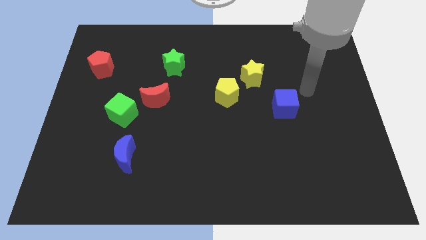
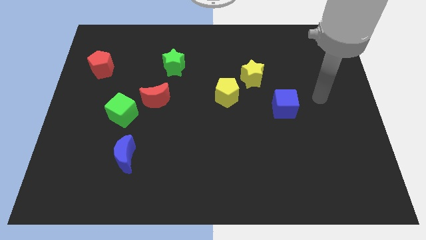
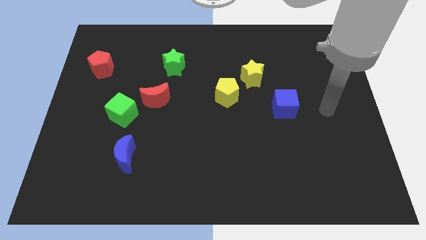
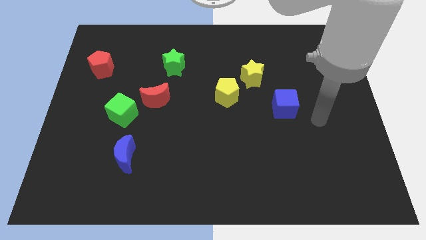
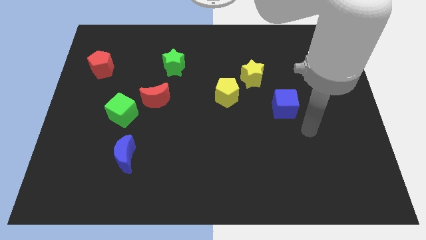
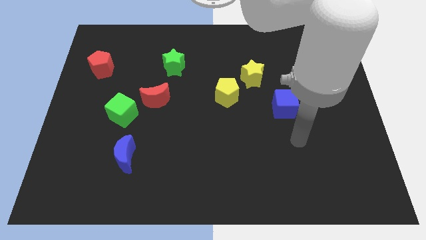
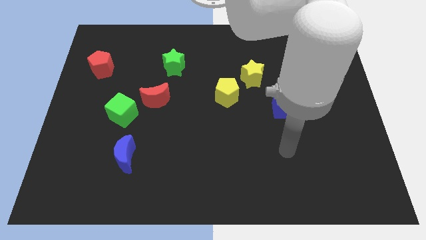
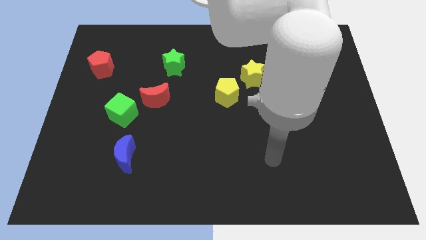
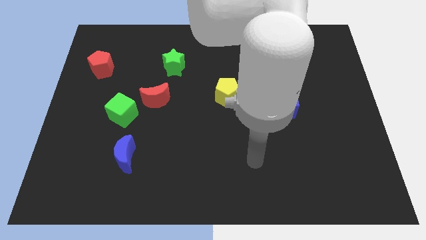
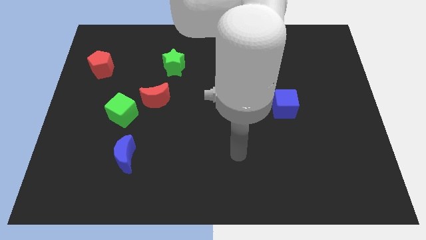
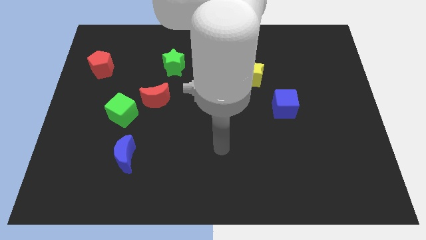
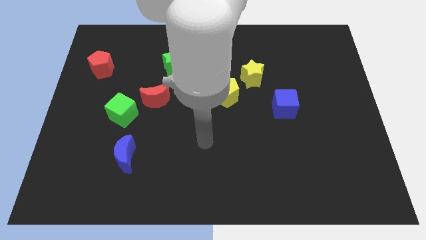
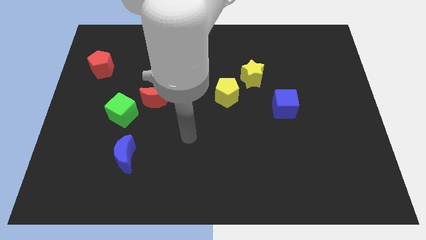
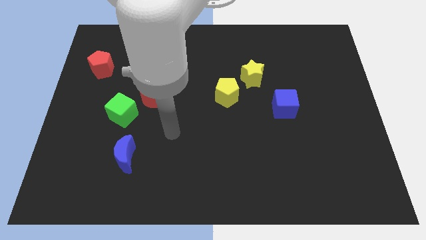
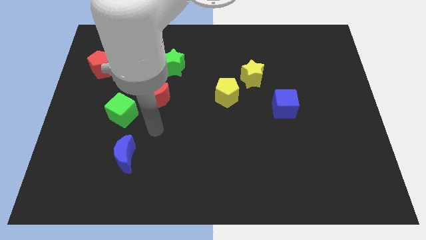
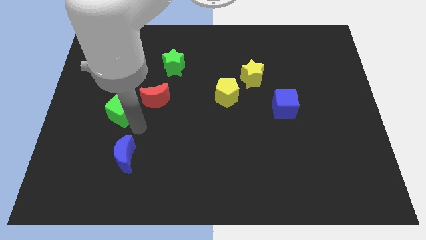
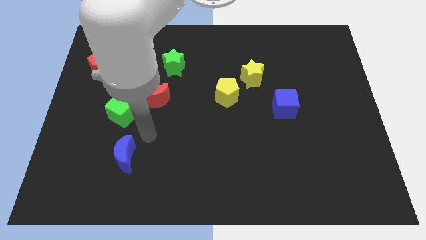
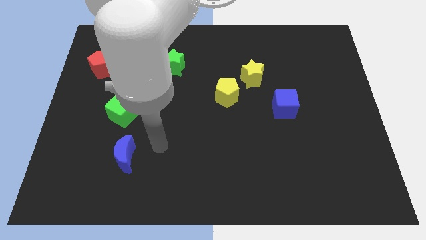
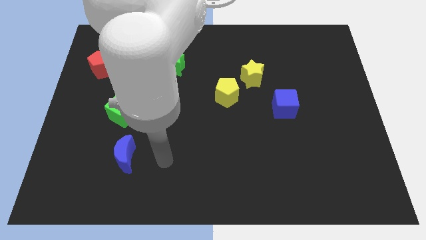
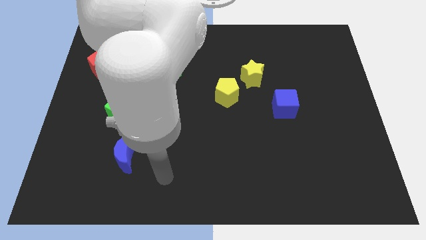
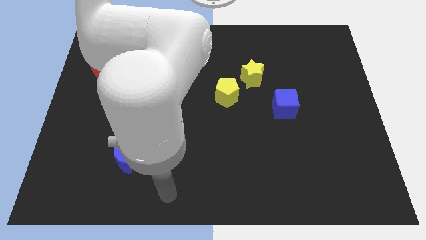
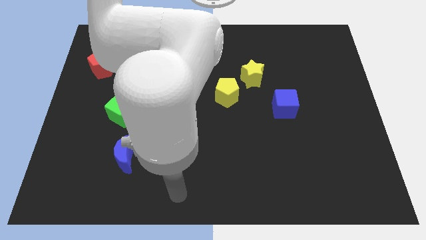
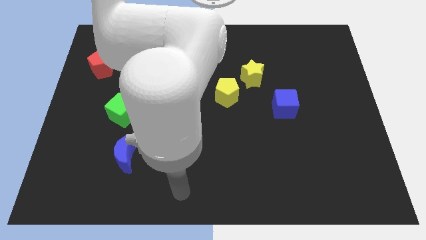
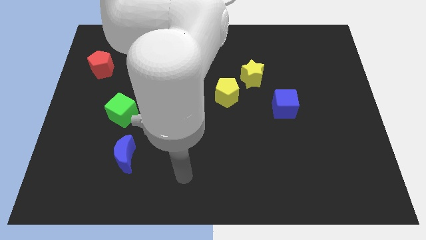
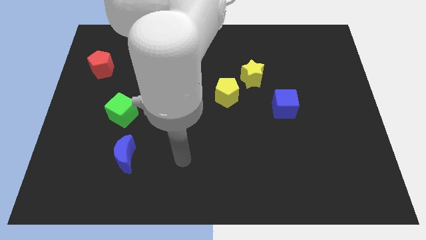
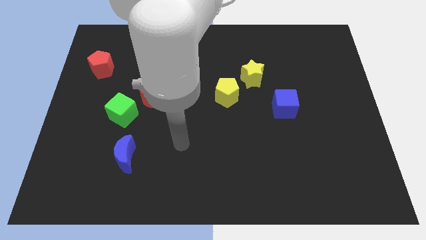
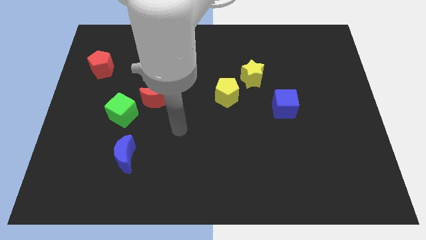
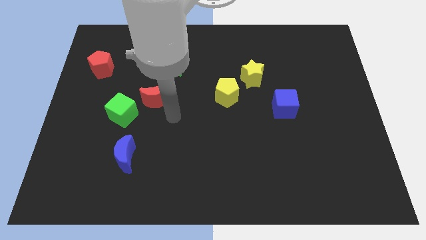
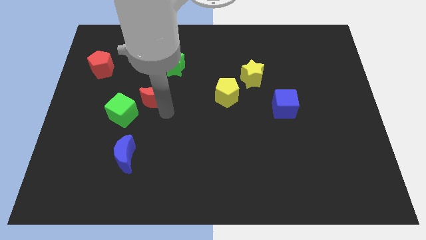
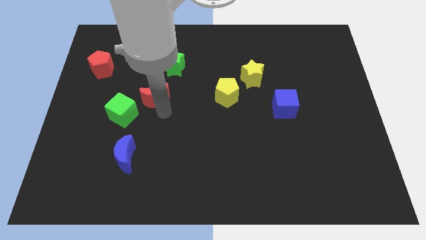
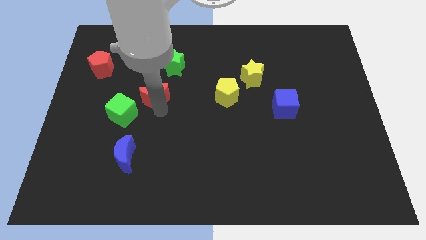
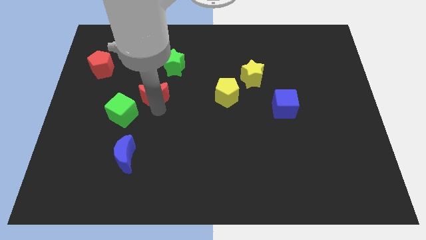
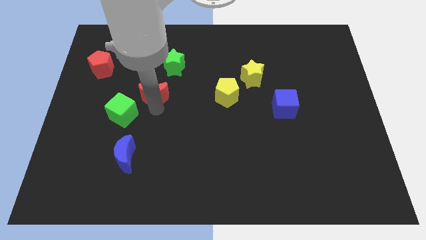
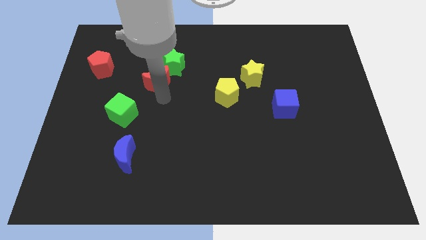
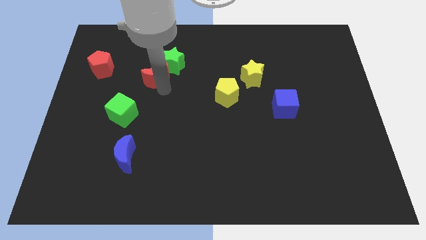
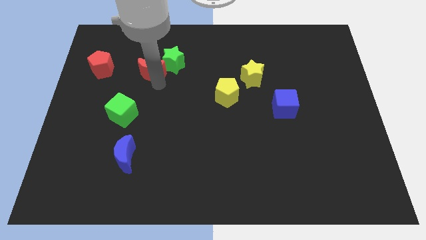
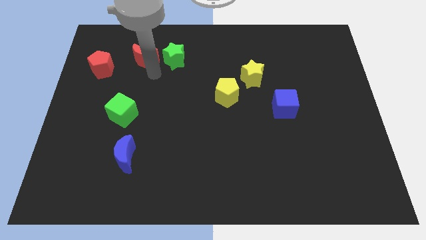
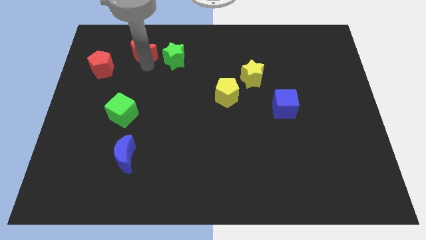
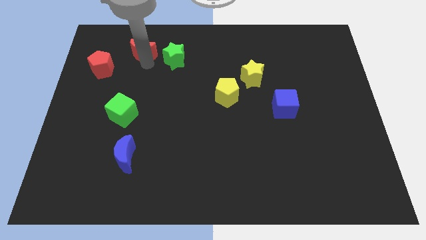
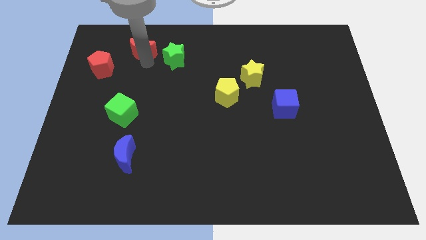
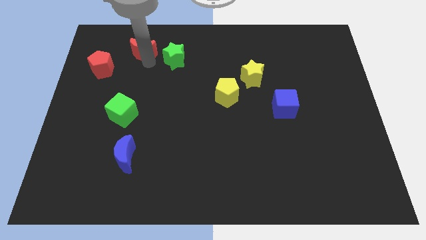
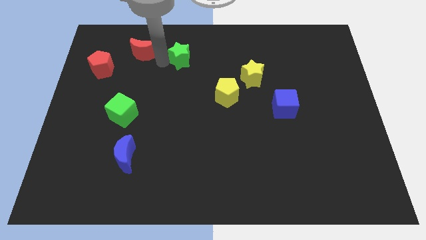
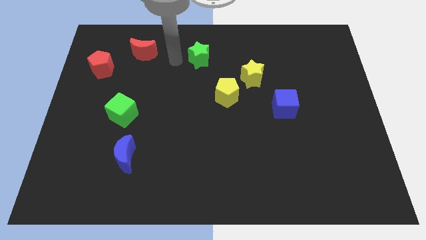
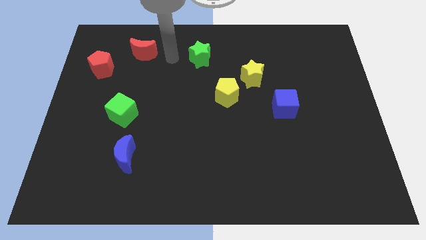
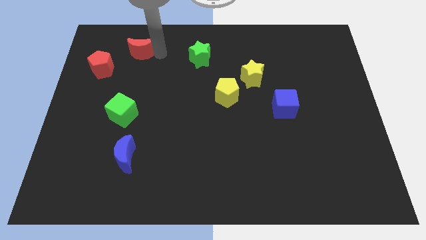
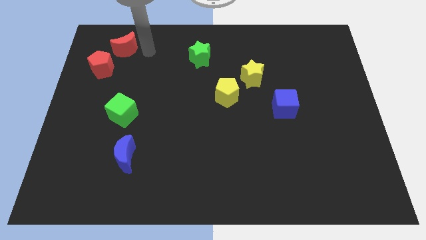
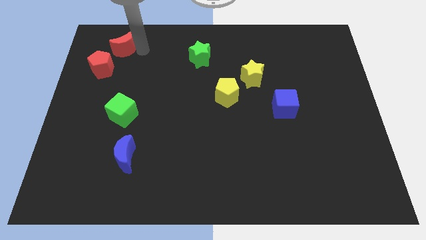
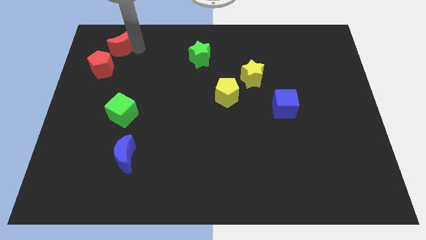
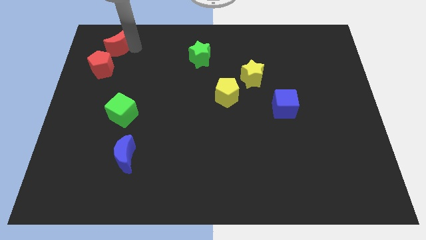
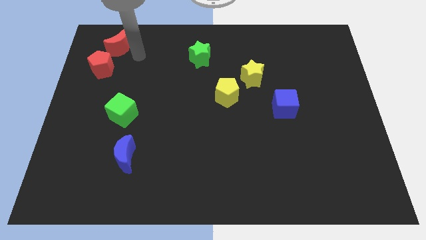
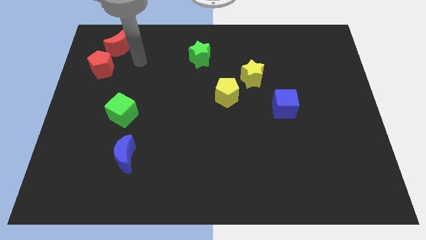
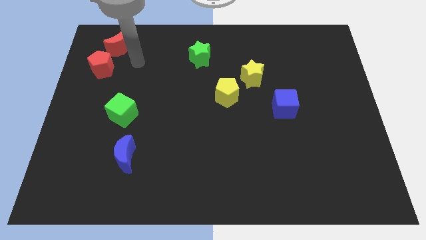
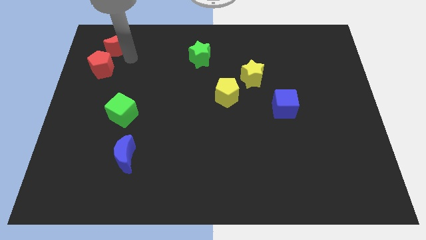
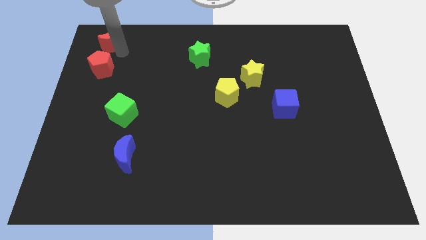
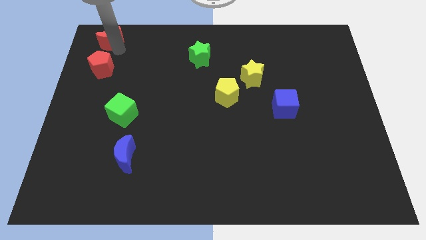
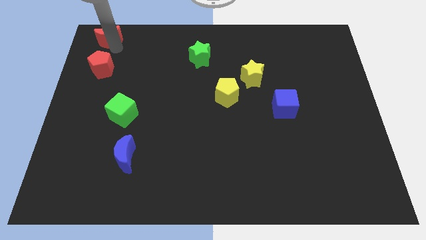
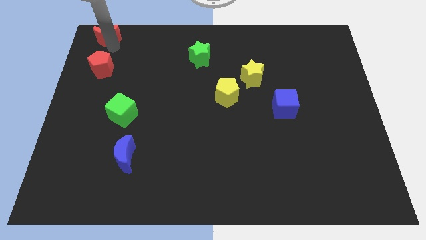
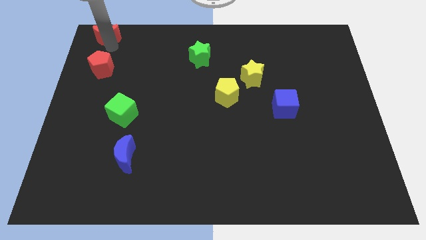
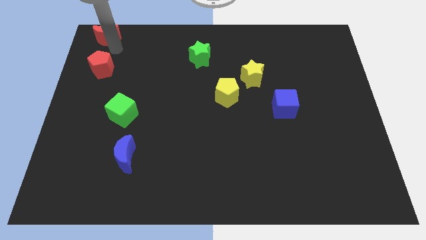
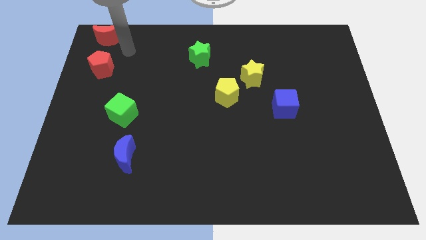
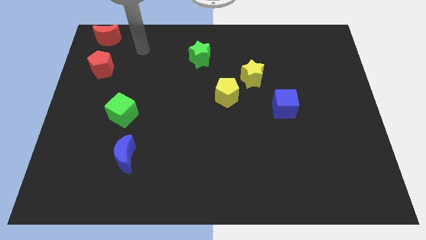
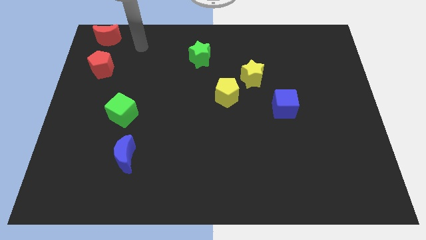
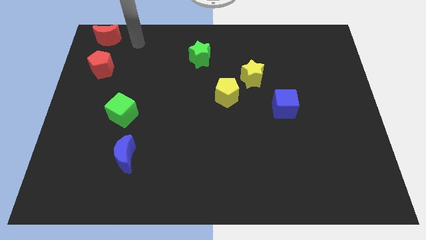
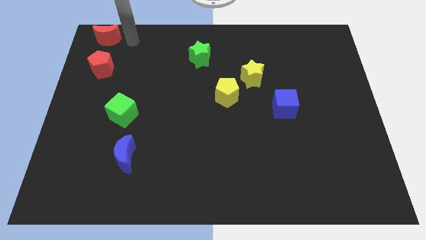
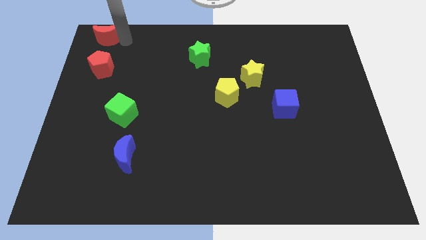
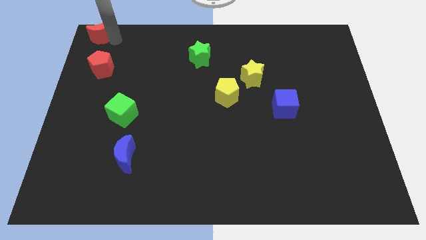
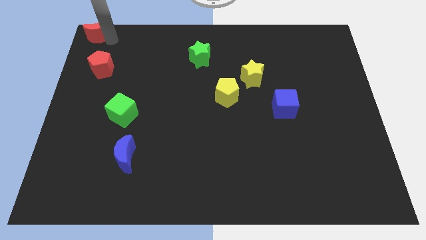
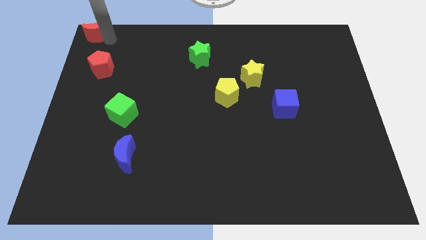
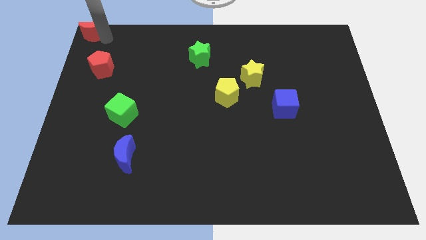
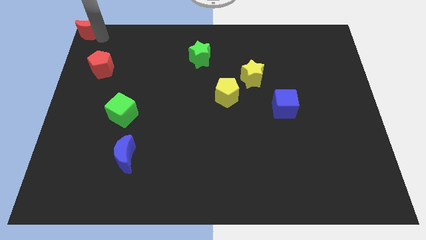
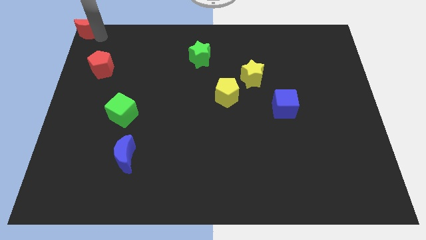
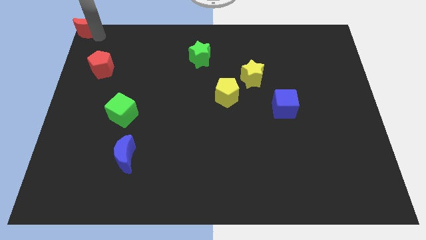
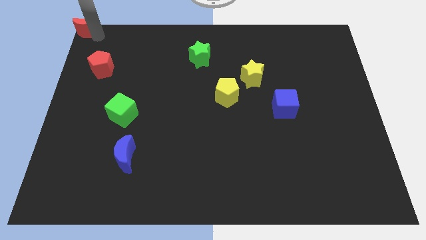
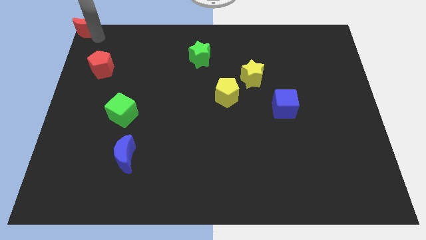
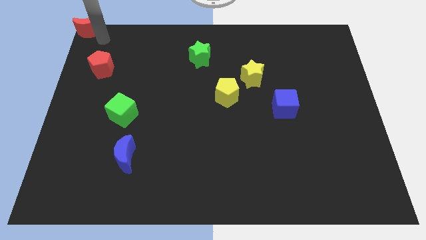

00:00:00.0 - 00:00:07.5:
move the red crescent to the top left corner

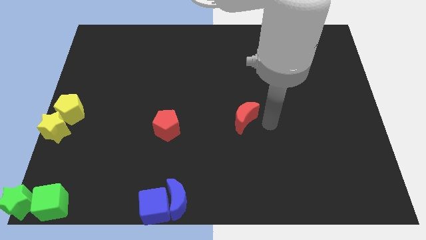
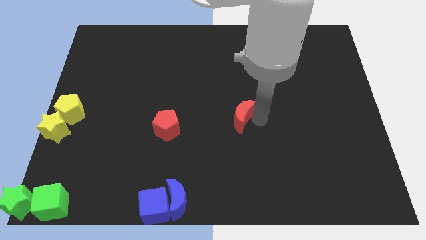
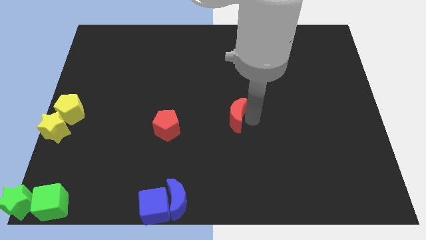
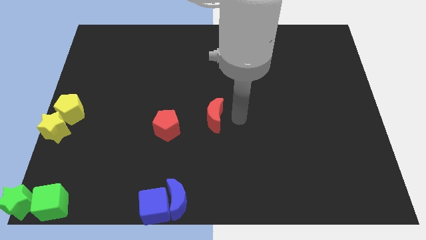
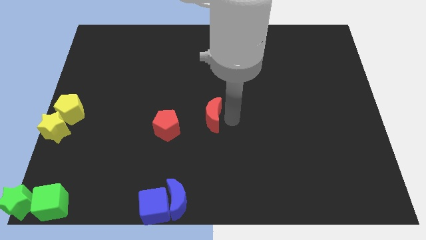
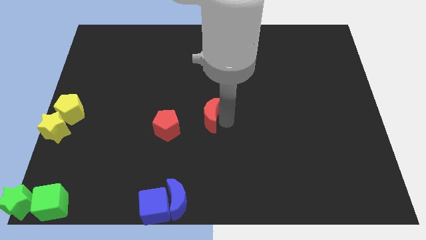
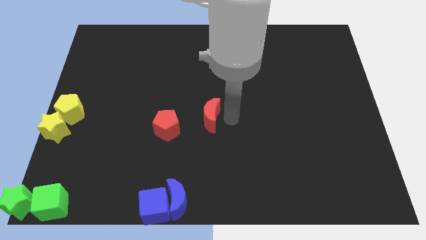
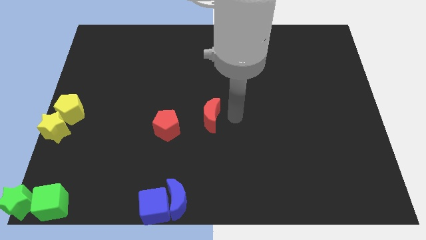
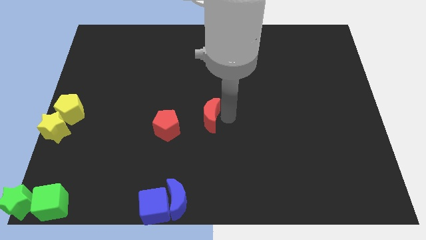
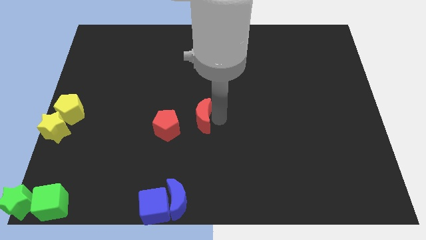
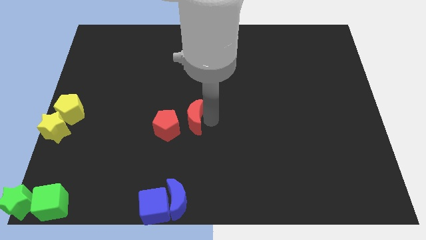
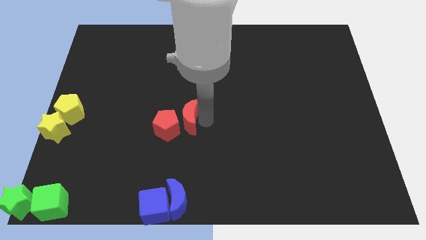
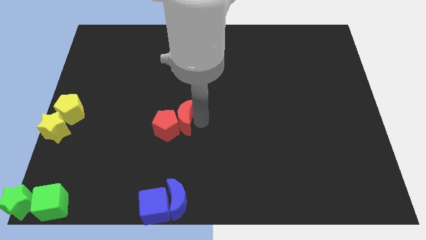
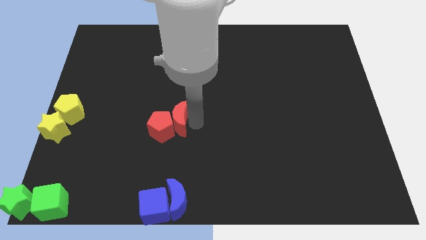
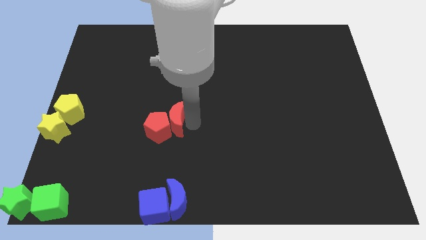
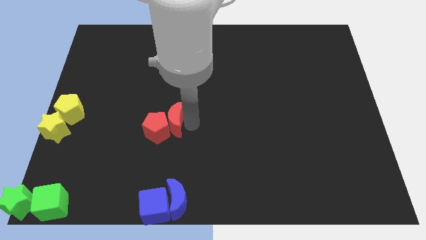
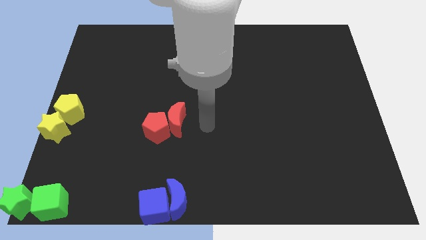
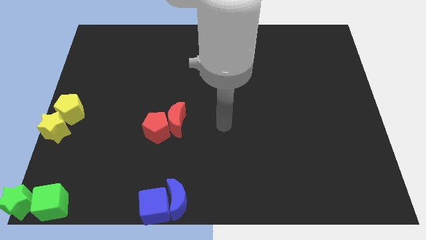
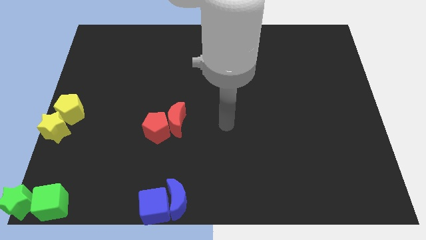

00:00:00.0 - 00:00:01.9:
move the red crescent to top right side of the red pentagon
